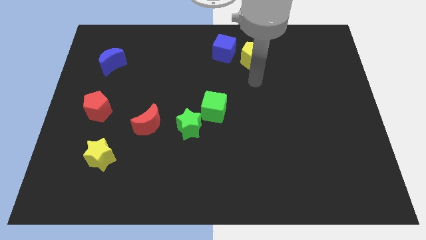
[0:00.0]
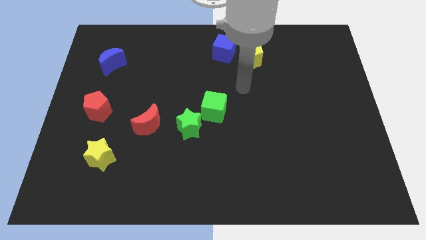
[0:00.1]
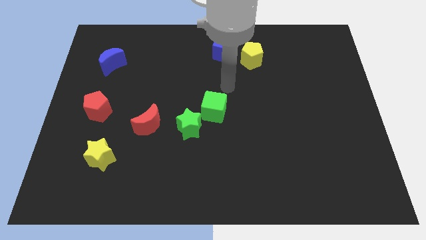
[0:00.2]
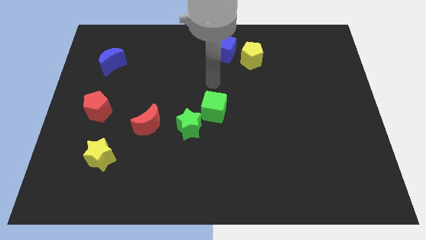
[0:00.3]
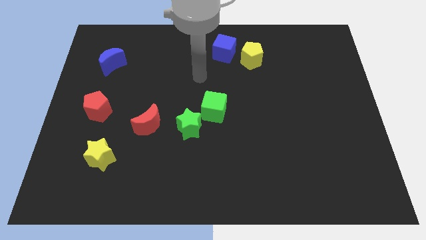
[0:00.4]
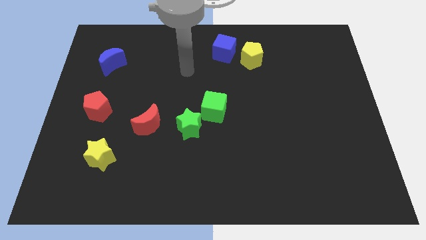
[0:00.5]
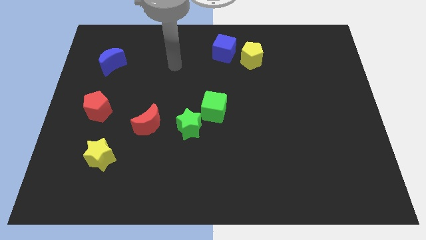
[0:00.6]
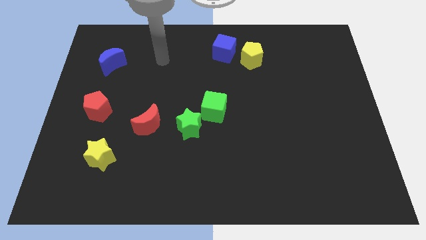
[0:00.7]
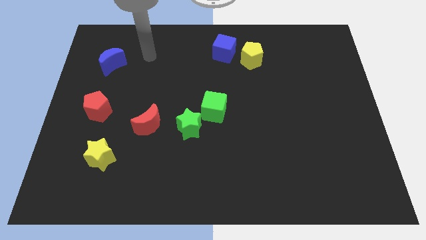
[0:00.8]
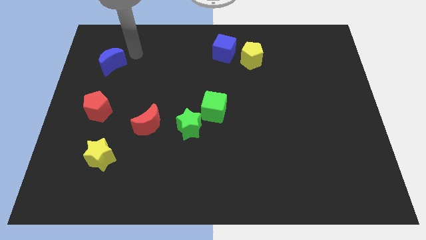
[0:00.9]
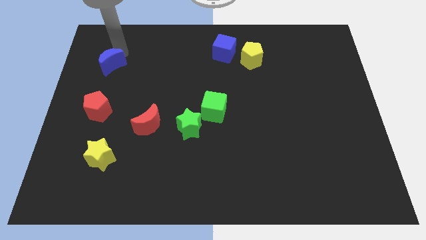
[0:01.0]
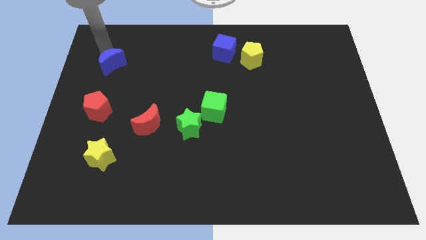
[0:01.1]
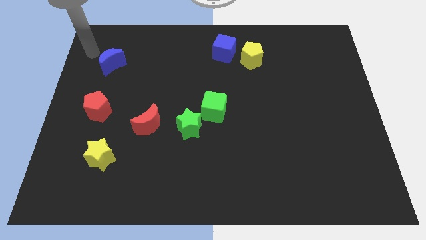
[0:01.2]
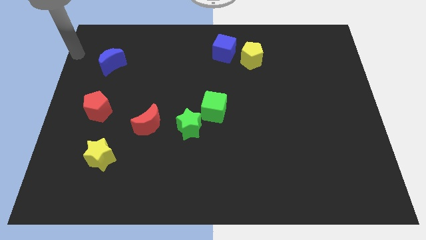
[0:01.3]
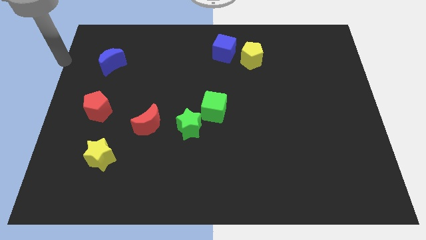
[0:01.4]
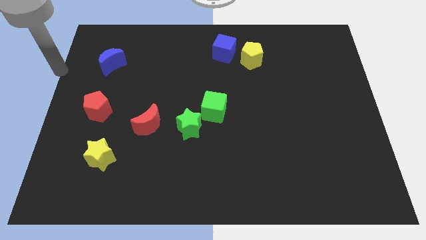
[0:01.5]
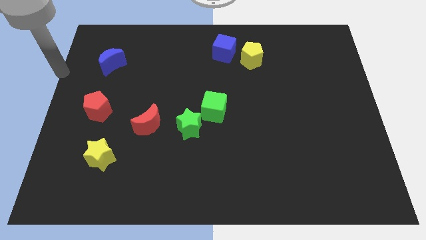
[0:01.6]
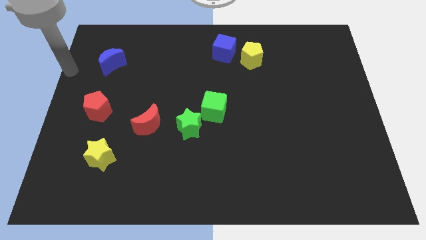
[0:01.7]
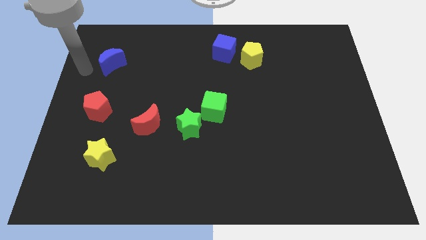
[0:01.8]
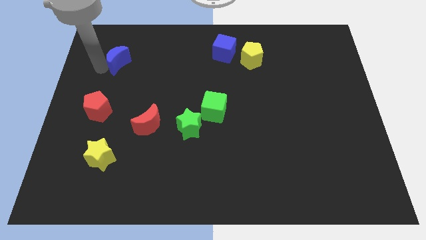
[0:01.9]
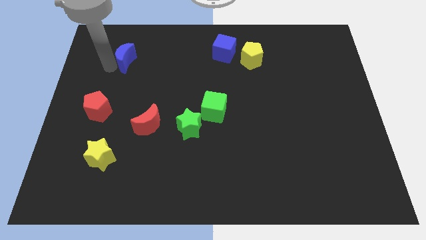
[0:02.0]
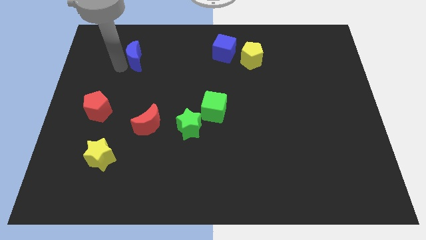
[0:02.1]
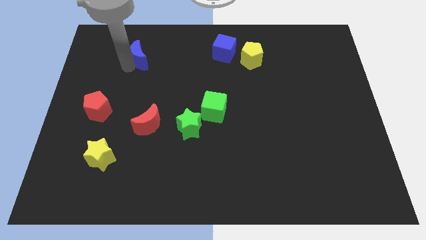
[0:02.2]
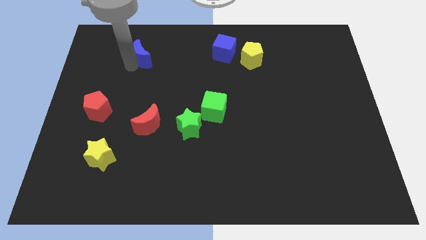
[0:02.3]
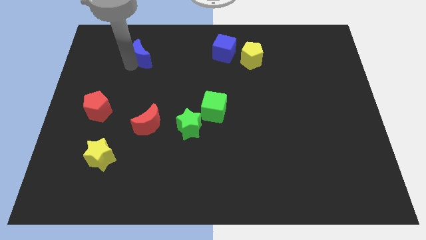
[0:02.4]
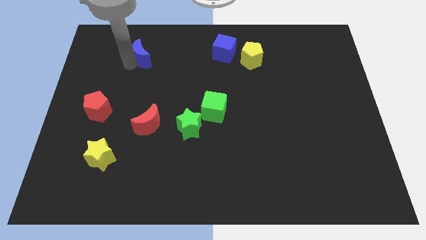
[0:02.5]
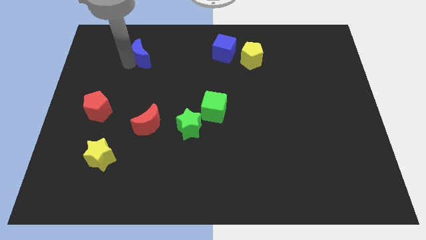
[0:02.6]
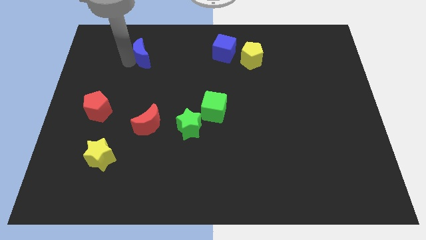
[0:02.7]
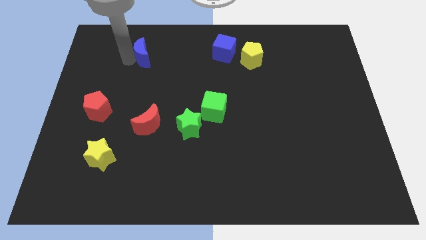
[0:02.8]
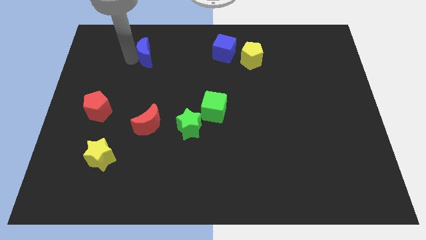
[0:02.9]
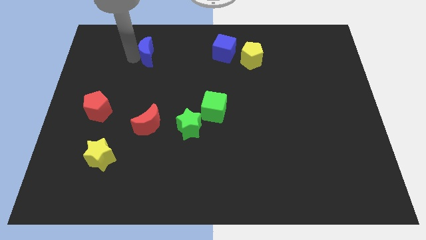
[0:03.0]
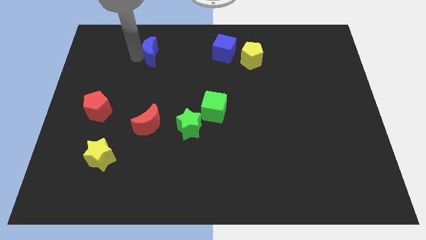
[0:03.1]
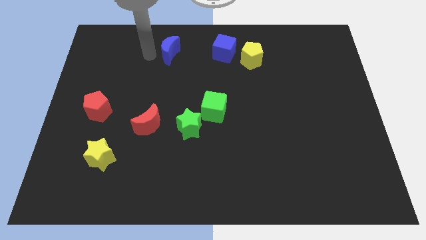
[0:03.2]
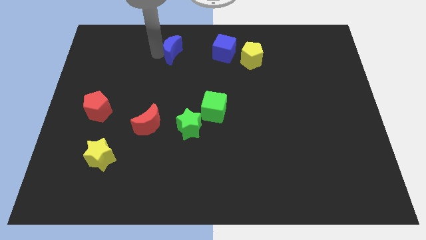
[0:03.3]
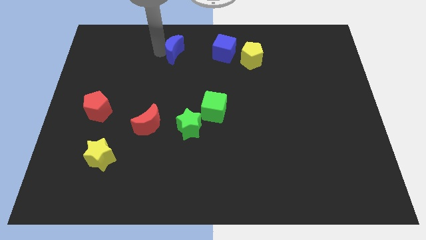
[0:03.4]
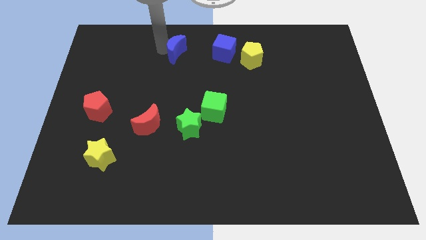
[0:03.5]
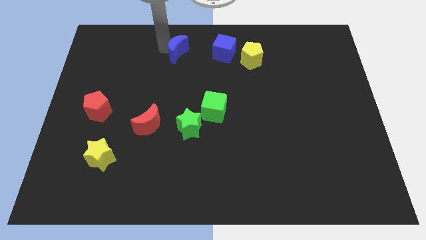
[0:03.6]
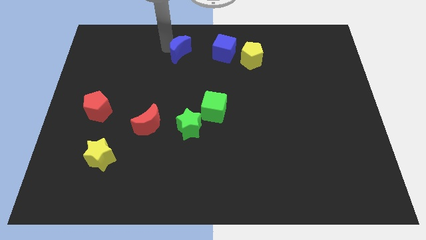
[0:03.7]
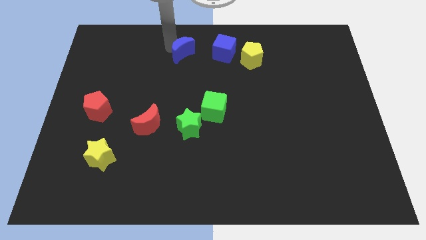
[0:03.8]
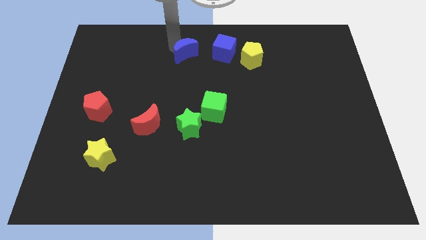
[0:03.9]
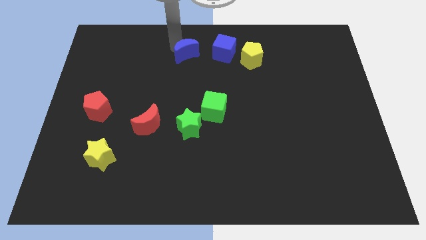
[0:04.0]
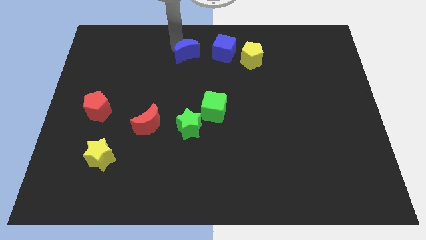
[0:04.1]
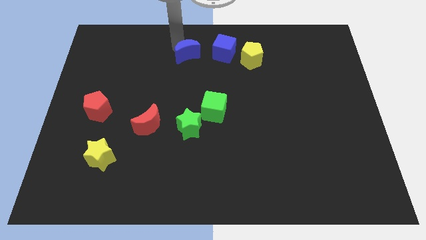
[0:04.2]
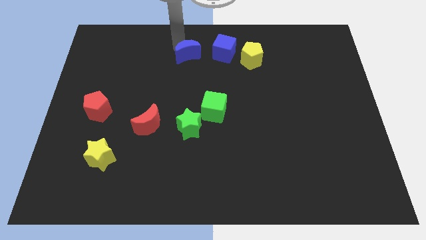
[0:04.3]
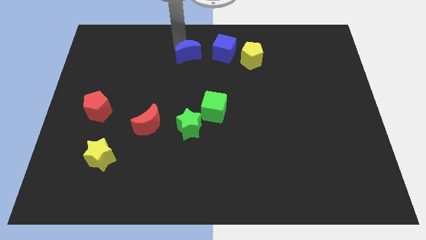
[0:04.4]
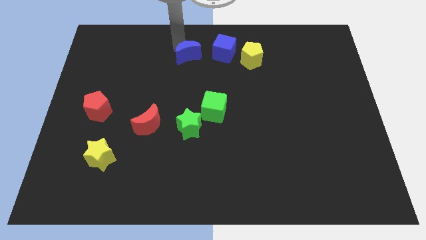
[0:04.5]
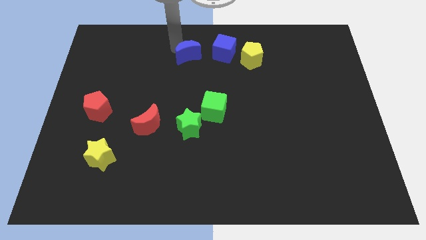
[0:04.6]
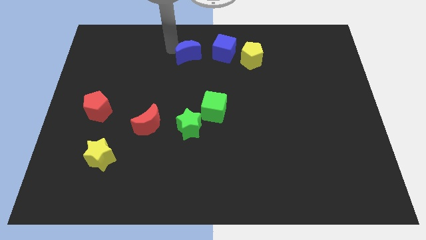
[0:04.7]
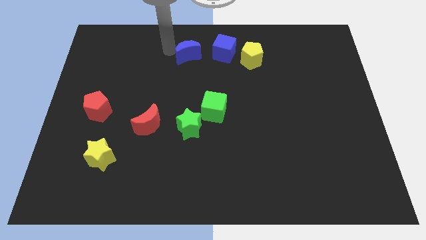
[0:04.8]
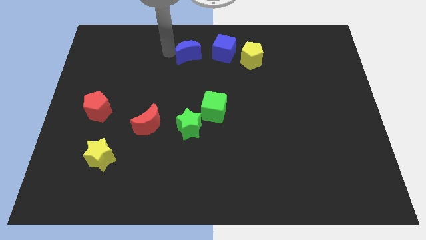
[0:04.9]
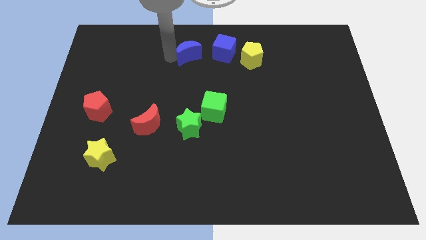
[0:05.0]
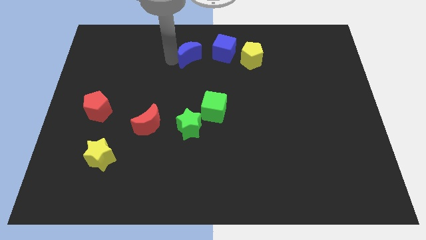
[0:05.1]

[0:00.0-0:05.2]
push the blue crescent to the left of the blue cube

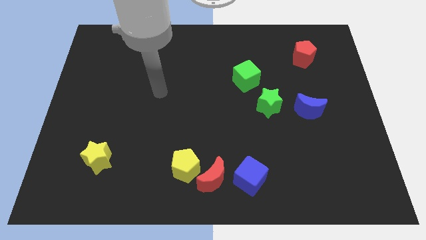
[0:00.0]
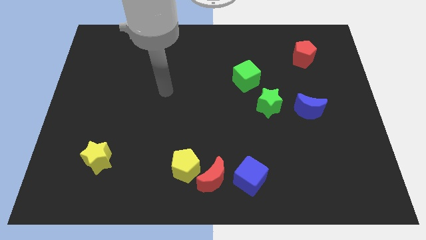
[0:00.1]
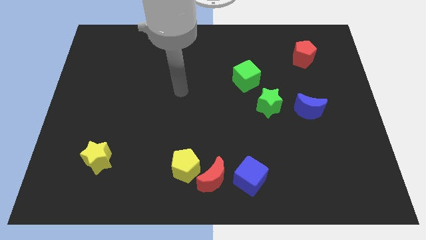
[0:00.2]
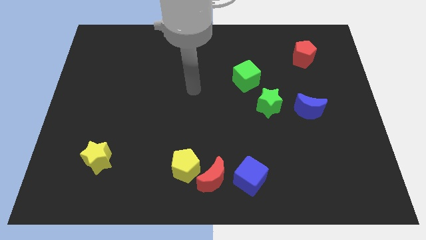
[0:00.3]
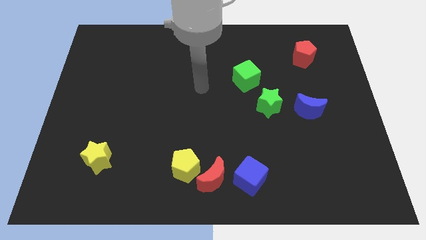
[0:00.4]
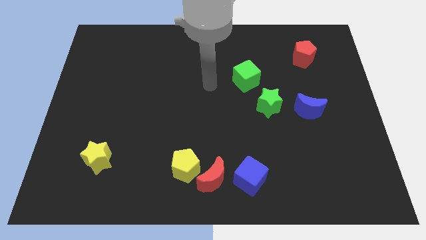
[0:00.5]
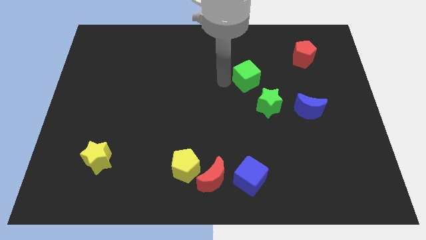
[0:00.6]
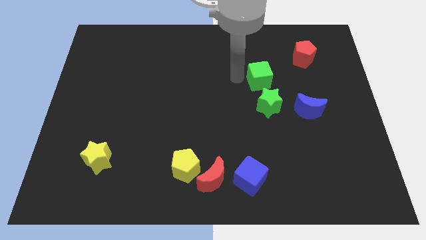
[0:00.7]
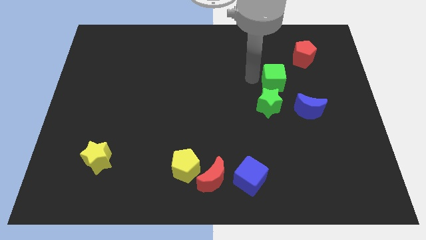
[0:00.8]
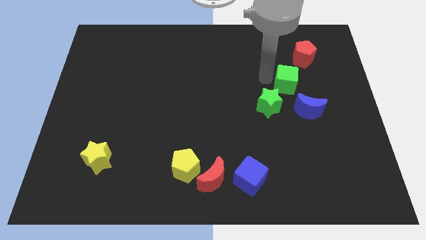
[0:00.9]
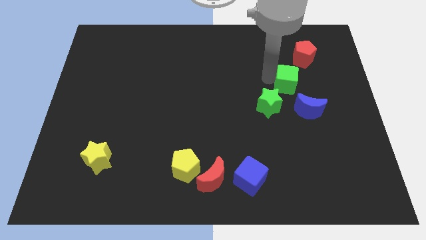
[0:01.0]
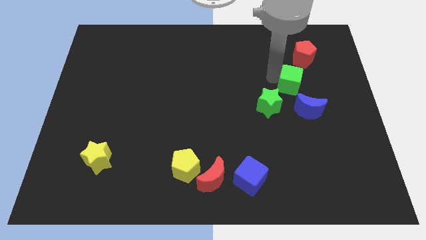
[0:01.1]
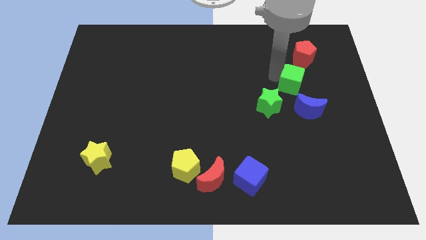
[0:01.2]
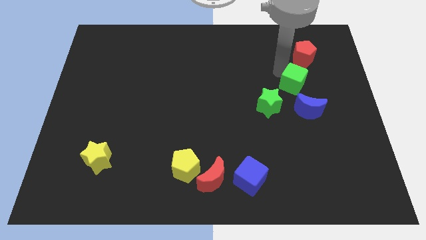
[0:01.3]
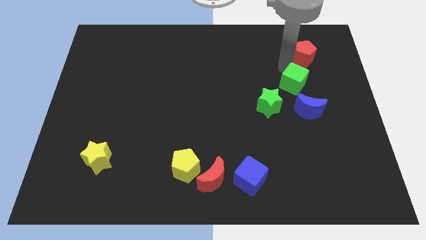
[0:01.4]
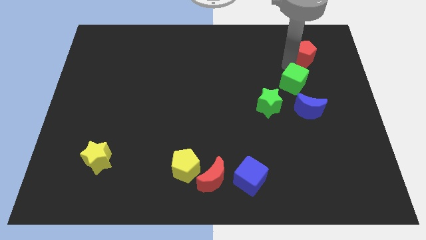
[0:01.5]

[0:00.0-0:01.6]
push the green cube towards the center right

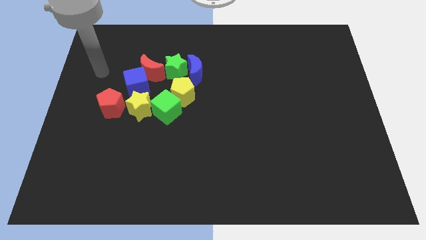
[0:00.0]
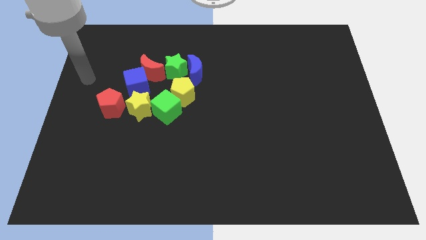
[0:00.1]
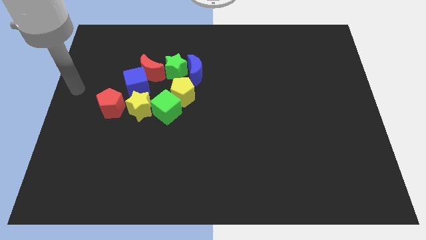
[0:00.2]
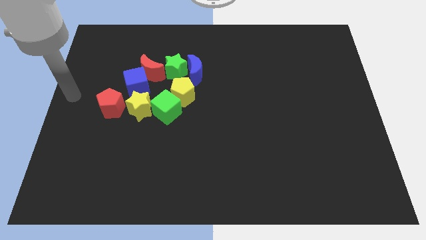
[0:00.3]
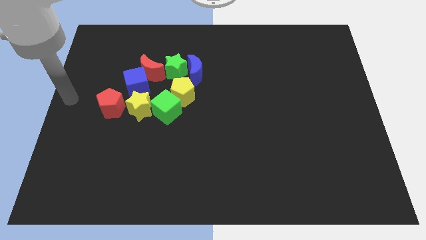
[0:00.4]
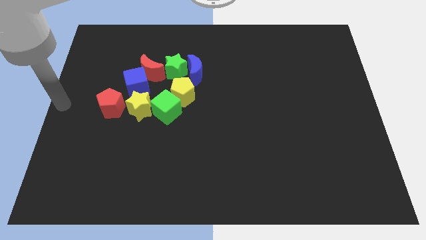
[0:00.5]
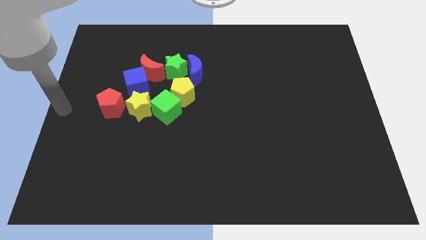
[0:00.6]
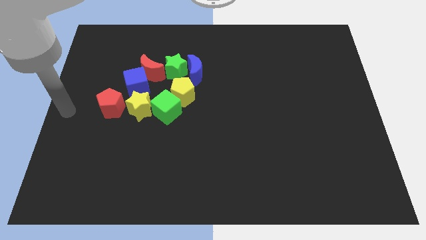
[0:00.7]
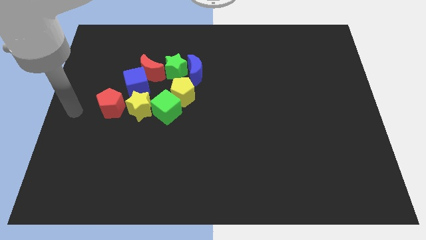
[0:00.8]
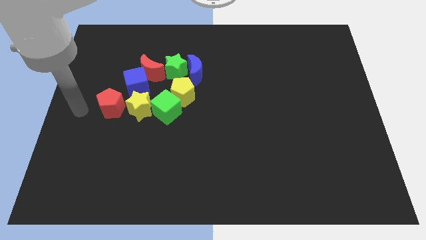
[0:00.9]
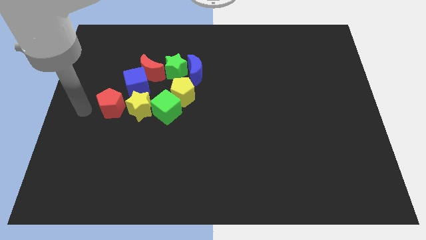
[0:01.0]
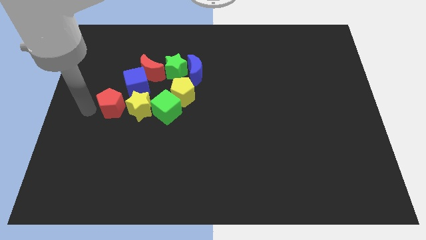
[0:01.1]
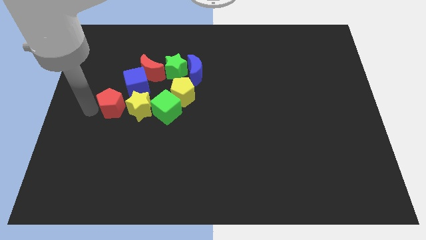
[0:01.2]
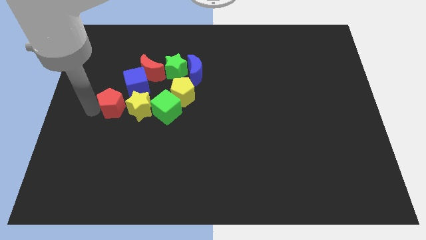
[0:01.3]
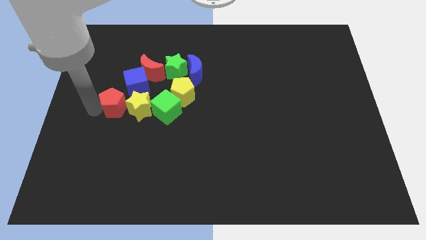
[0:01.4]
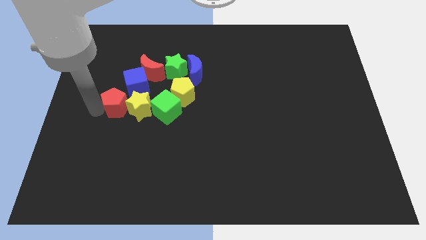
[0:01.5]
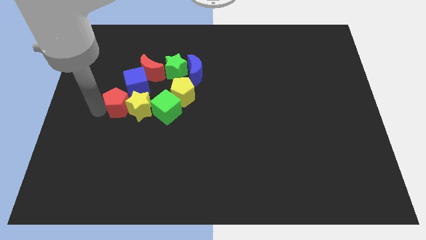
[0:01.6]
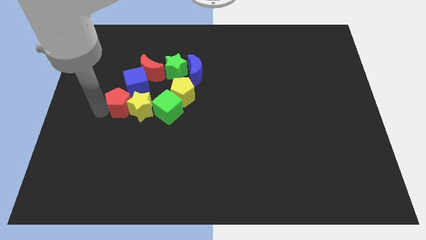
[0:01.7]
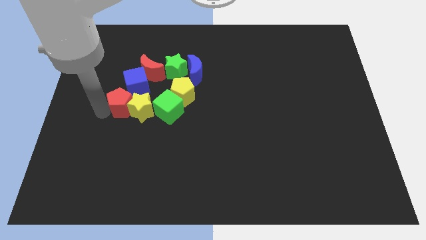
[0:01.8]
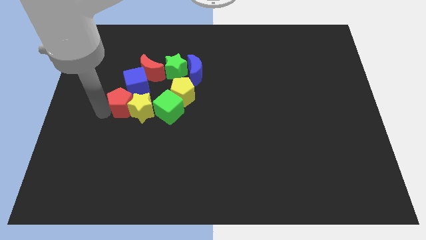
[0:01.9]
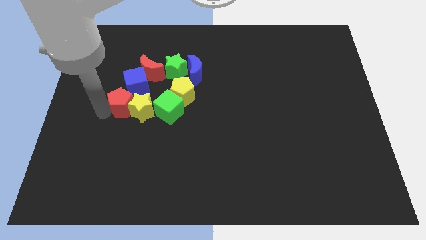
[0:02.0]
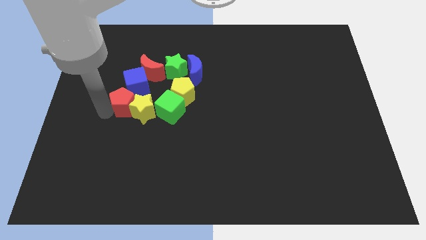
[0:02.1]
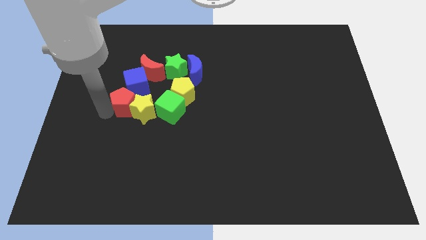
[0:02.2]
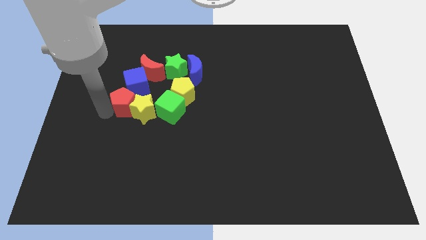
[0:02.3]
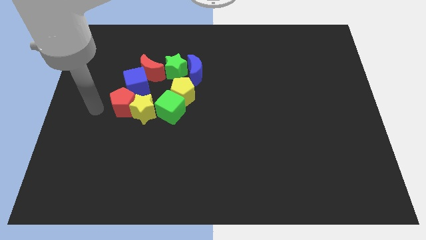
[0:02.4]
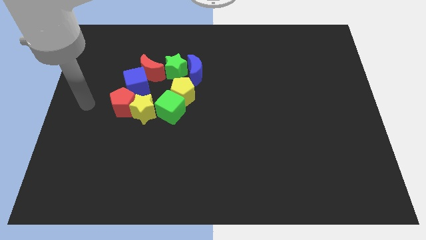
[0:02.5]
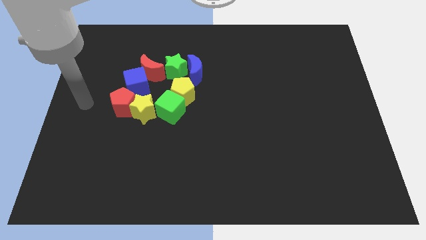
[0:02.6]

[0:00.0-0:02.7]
push the red pentagon into the yellow star
